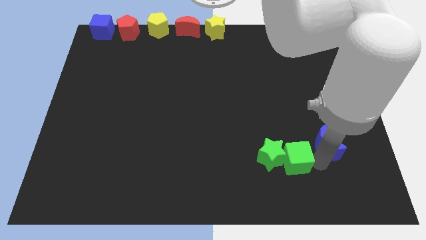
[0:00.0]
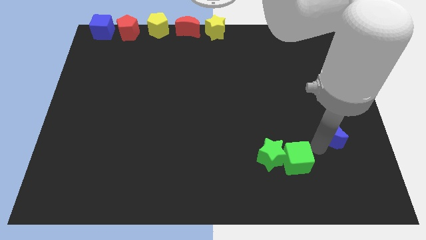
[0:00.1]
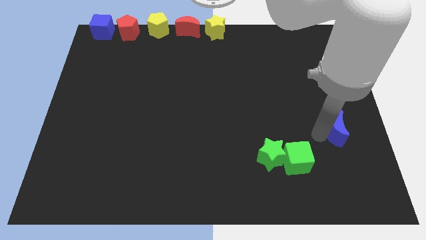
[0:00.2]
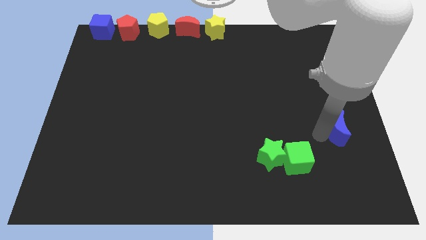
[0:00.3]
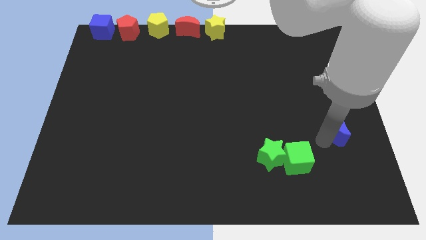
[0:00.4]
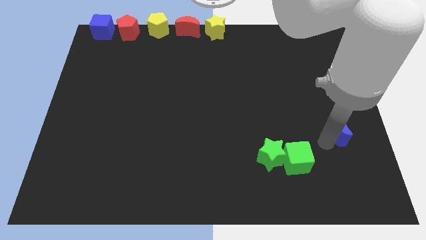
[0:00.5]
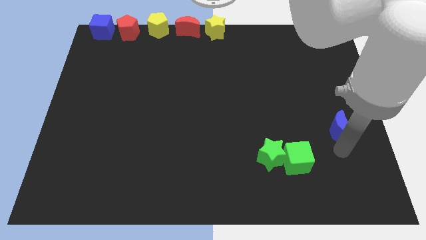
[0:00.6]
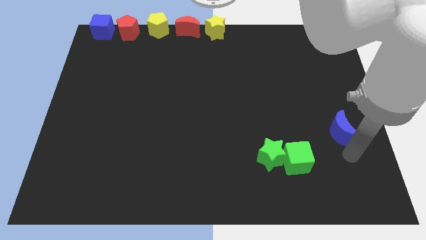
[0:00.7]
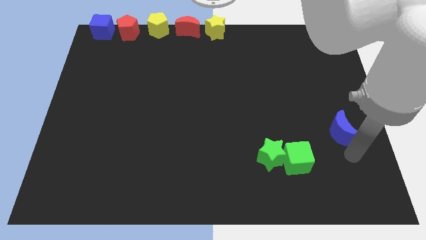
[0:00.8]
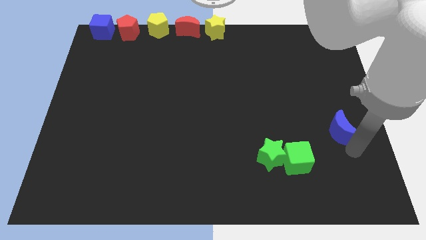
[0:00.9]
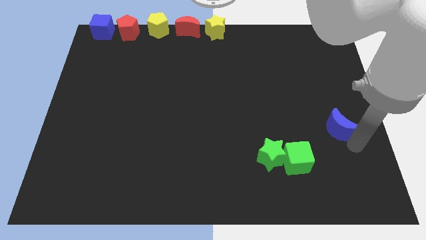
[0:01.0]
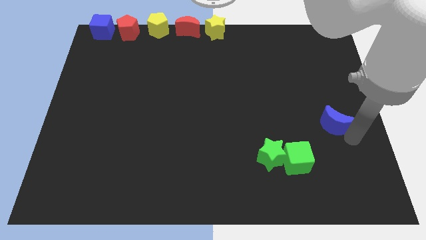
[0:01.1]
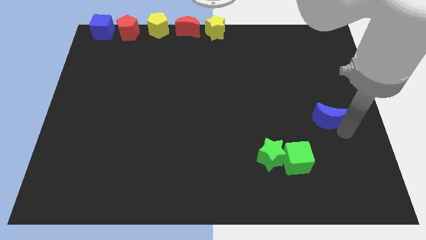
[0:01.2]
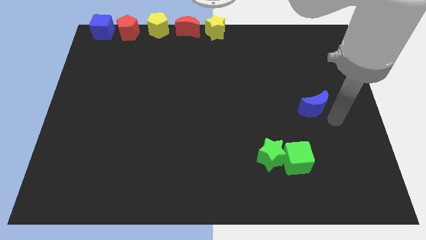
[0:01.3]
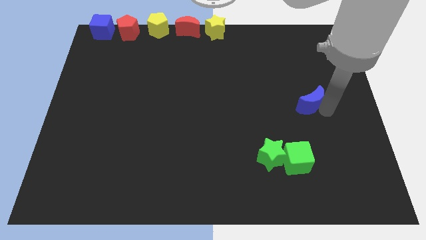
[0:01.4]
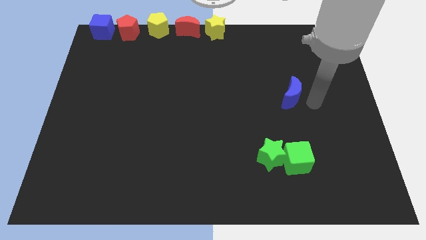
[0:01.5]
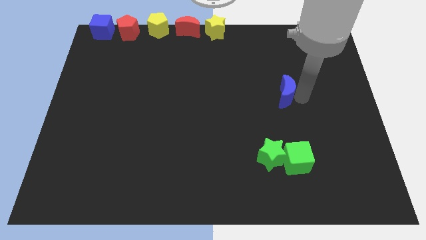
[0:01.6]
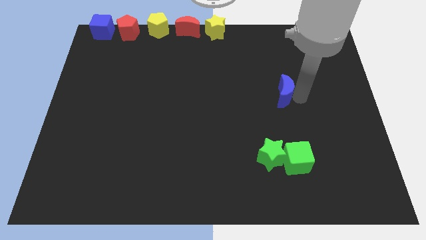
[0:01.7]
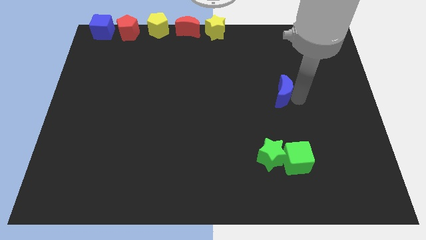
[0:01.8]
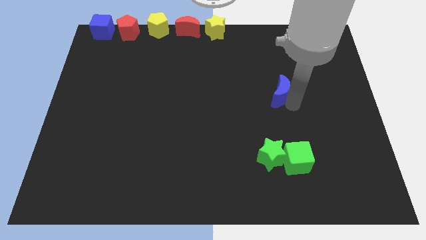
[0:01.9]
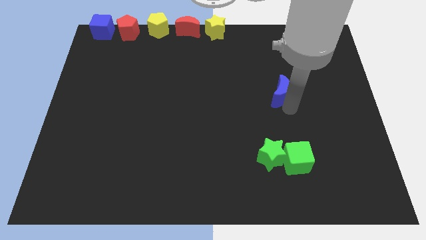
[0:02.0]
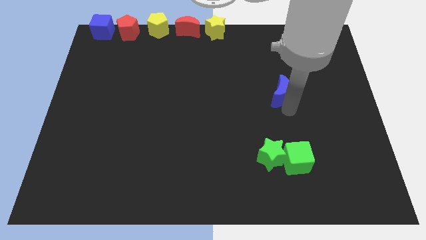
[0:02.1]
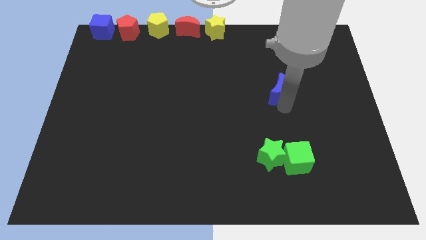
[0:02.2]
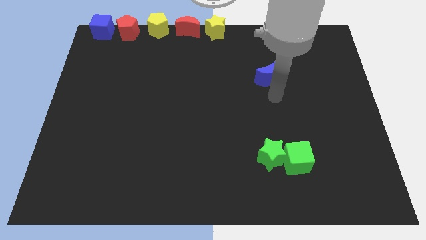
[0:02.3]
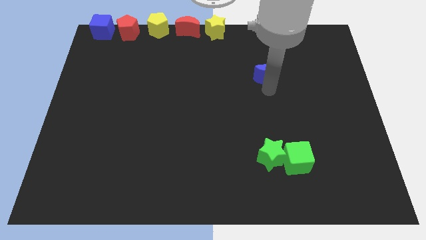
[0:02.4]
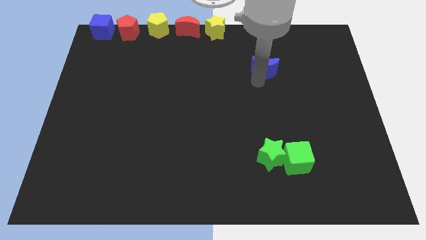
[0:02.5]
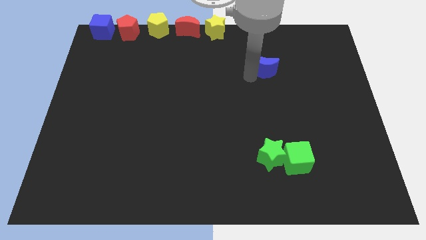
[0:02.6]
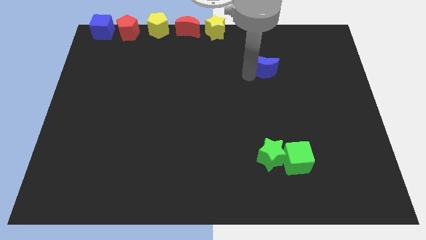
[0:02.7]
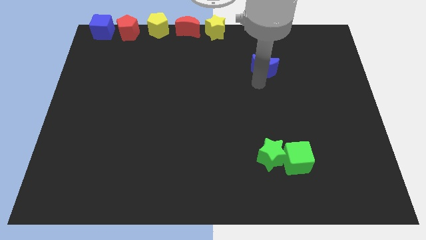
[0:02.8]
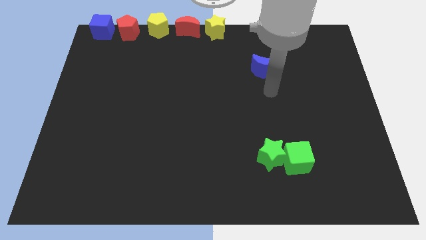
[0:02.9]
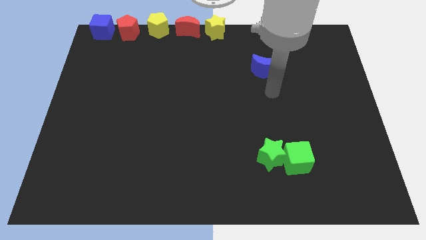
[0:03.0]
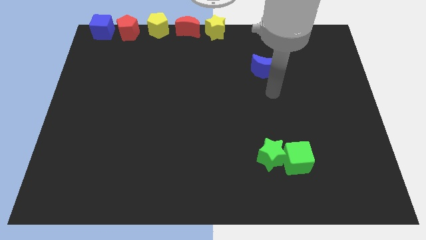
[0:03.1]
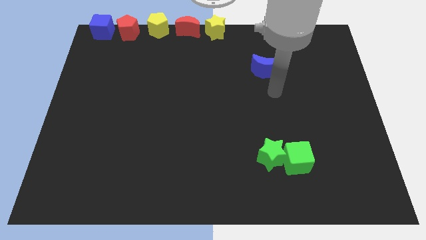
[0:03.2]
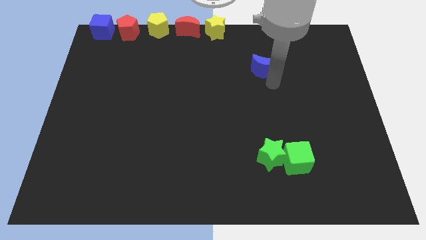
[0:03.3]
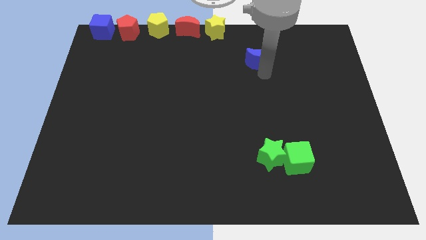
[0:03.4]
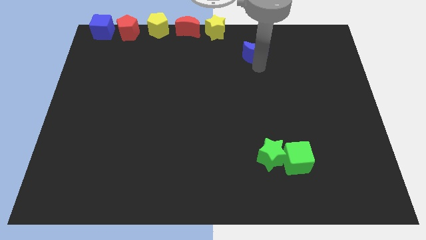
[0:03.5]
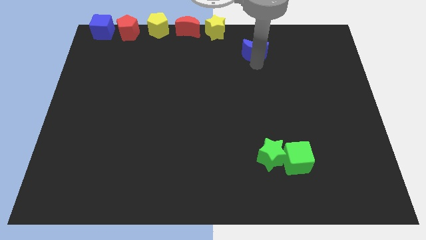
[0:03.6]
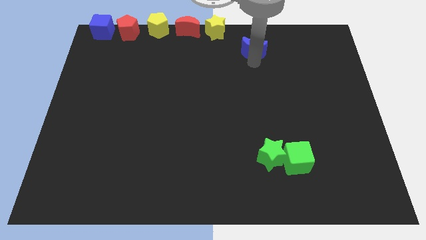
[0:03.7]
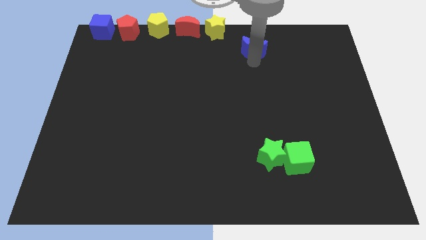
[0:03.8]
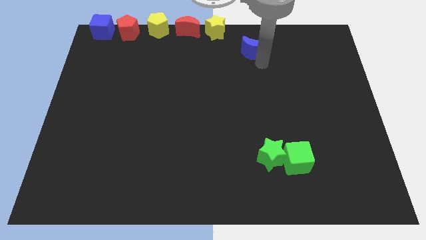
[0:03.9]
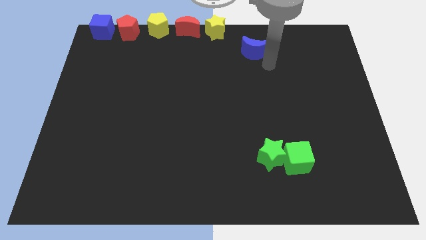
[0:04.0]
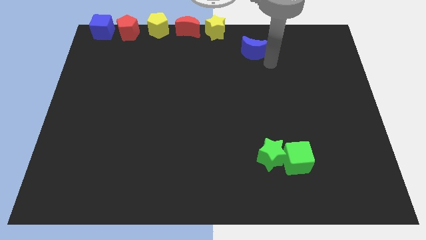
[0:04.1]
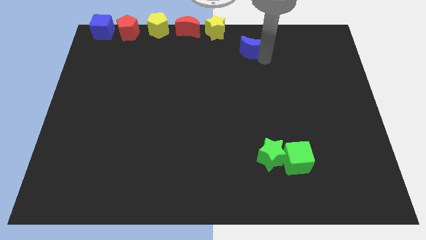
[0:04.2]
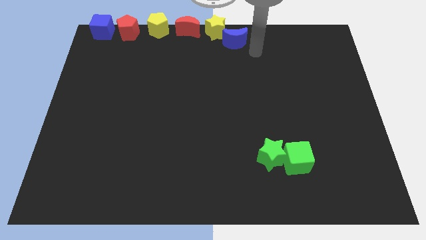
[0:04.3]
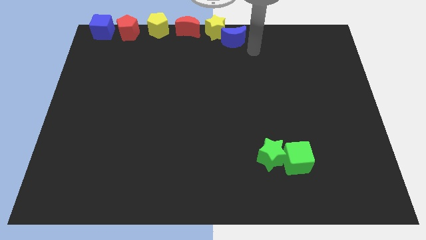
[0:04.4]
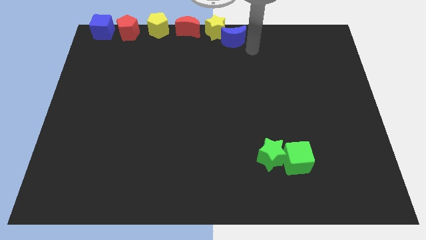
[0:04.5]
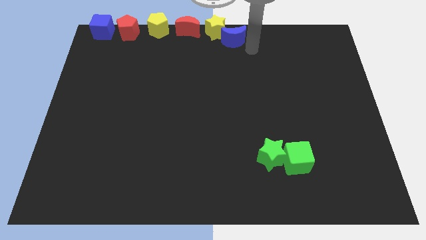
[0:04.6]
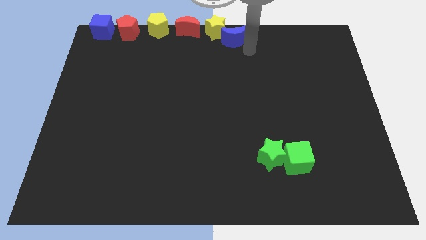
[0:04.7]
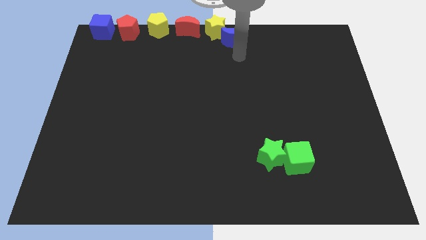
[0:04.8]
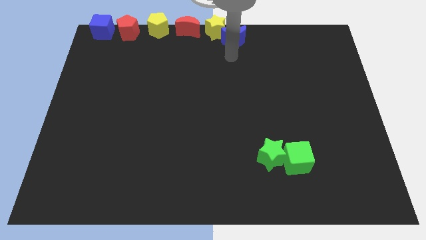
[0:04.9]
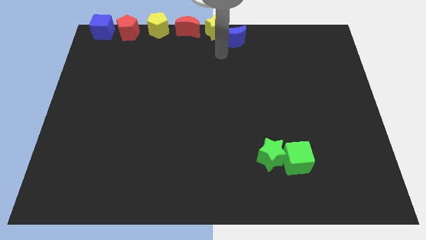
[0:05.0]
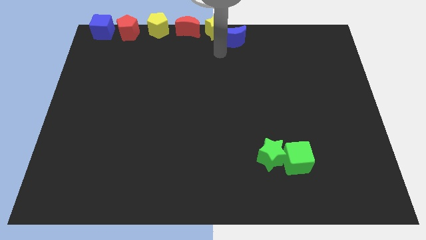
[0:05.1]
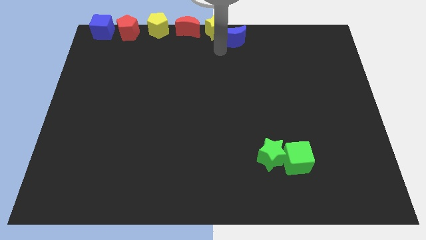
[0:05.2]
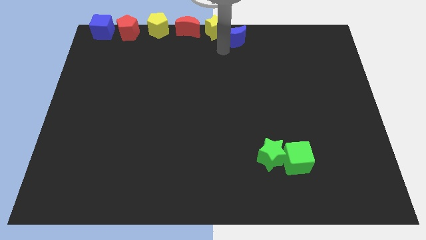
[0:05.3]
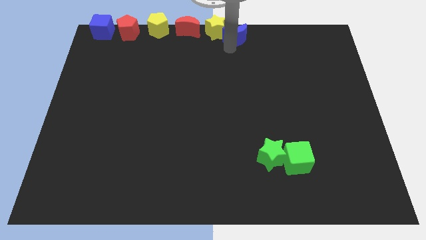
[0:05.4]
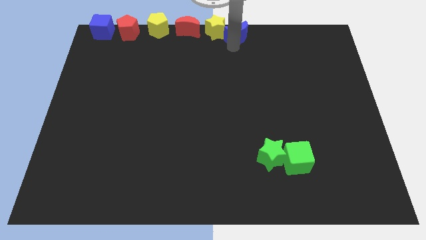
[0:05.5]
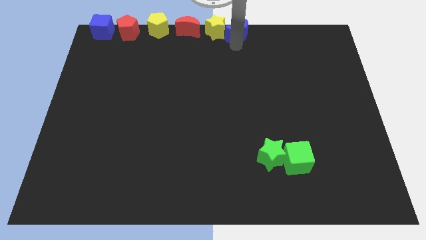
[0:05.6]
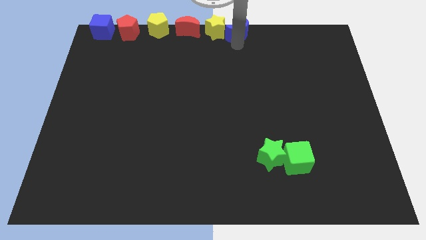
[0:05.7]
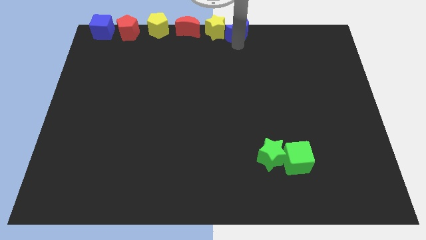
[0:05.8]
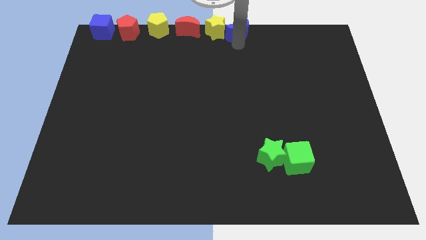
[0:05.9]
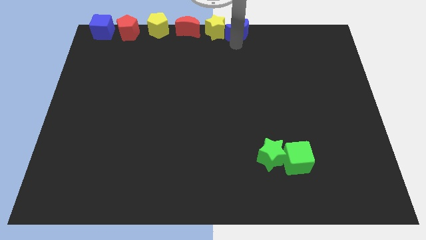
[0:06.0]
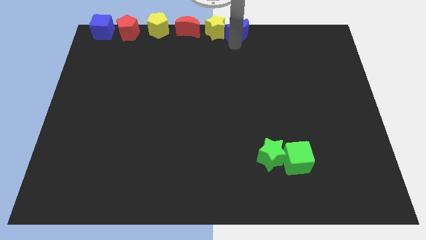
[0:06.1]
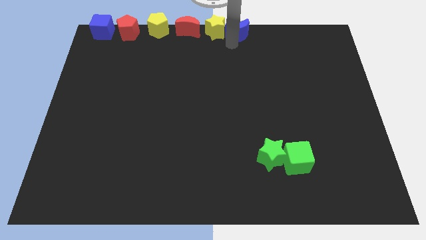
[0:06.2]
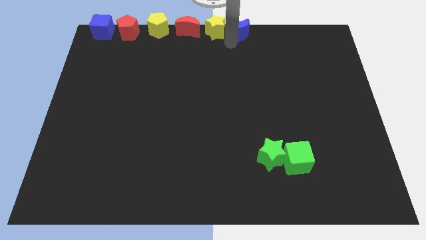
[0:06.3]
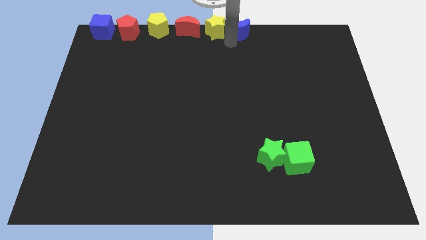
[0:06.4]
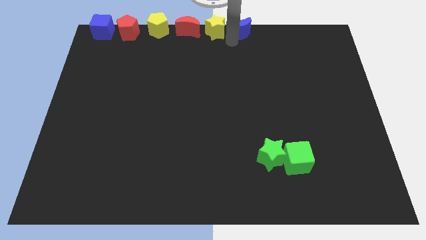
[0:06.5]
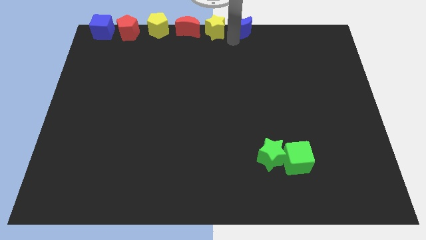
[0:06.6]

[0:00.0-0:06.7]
place the blue crescent right to the yellow star

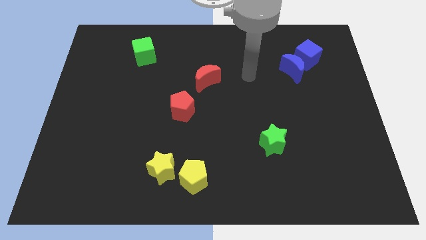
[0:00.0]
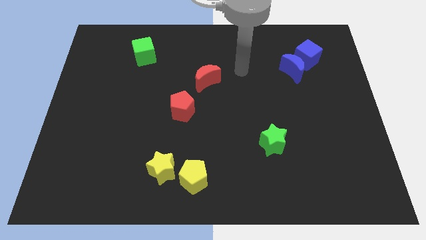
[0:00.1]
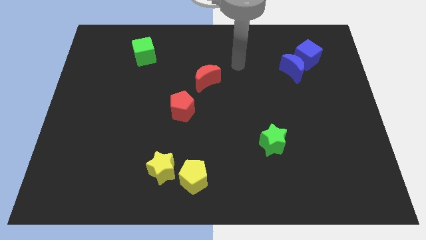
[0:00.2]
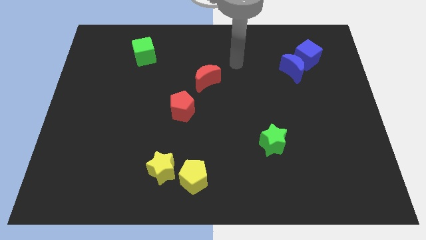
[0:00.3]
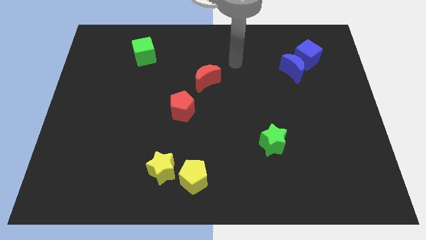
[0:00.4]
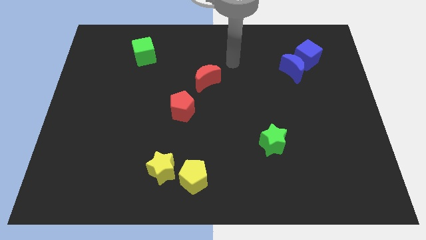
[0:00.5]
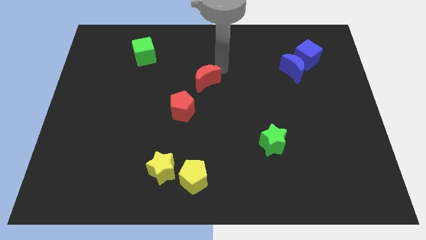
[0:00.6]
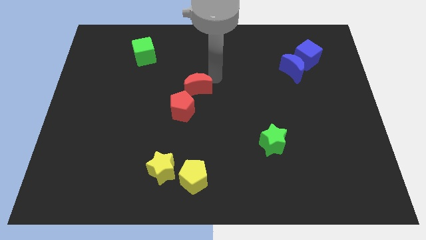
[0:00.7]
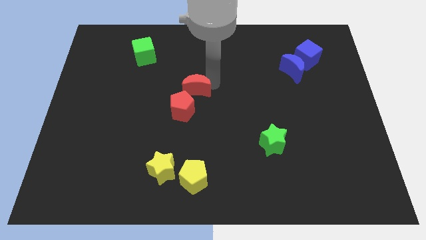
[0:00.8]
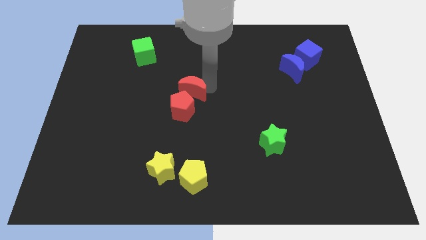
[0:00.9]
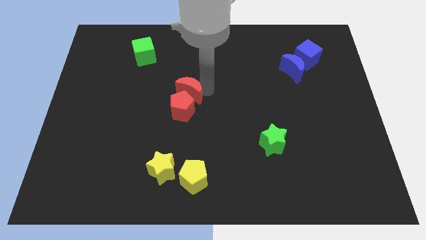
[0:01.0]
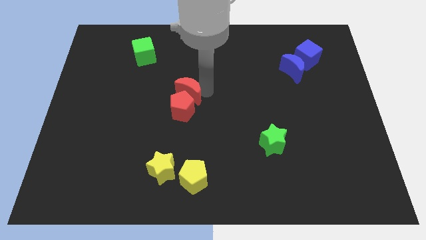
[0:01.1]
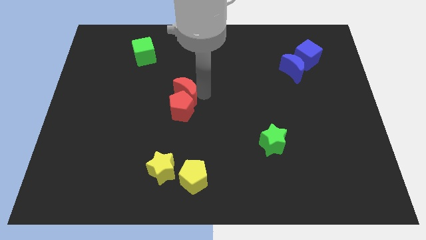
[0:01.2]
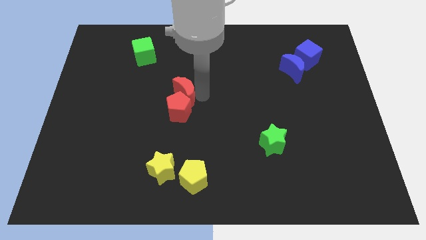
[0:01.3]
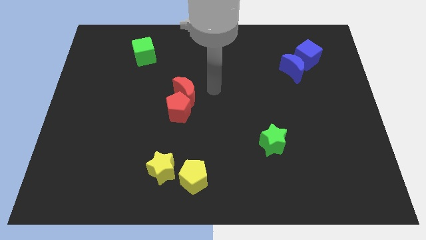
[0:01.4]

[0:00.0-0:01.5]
move the red crescent into the red pentagon

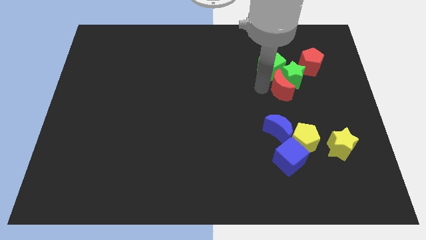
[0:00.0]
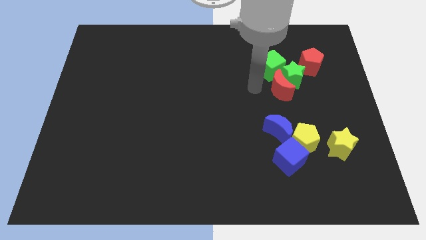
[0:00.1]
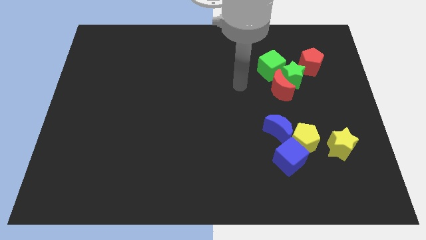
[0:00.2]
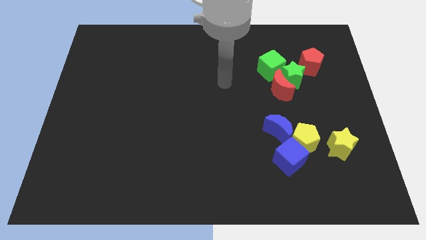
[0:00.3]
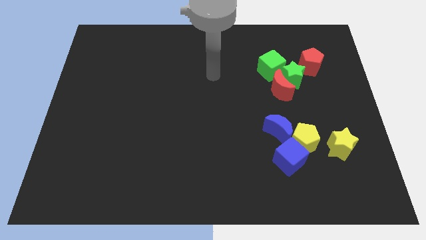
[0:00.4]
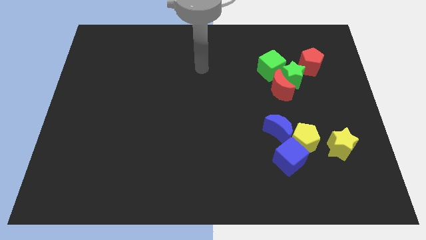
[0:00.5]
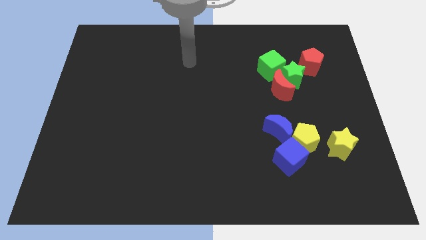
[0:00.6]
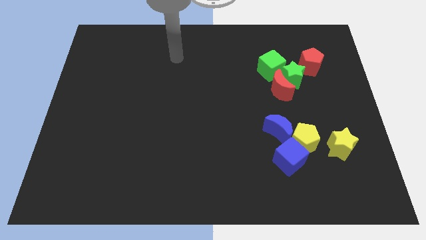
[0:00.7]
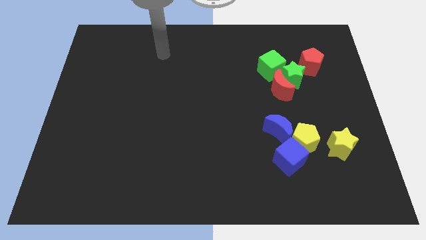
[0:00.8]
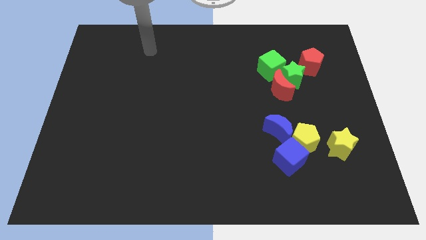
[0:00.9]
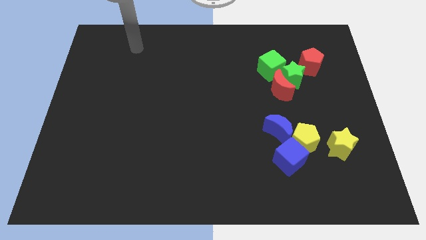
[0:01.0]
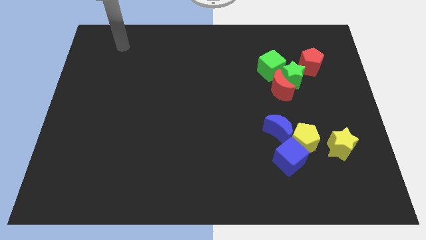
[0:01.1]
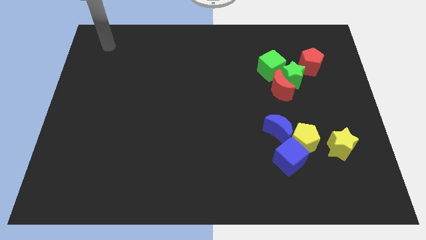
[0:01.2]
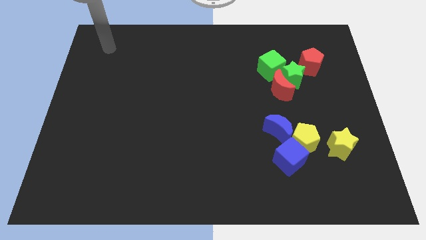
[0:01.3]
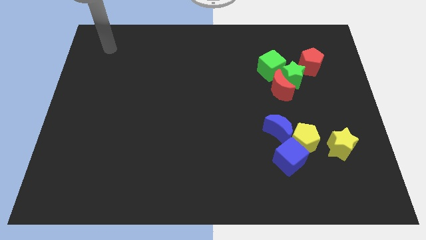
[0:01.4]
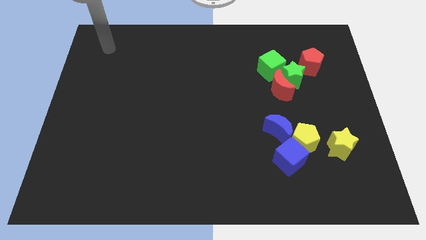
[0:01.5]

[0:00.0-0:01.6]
move your arm to the top left of the board
